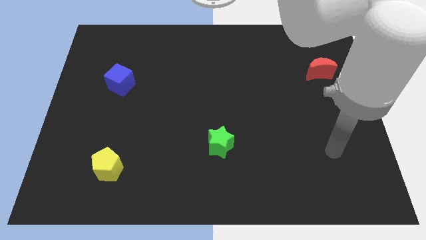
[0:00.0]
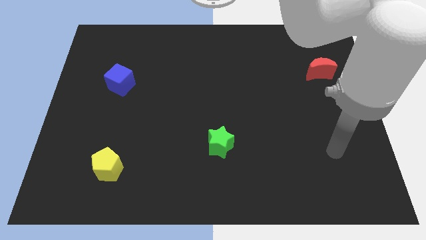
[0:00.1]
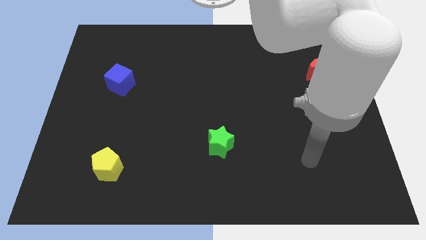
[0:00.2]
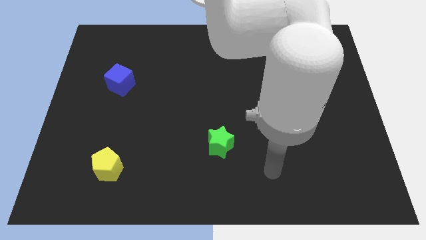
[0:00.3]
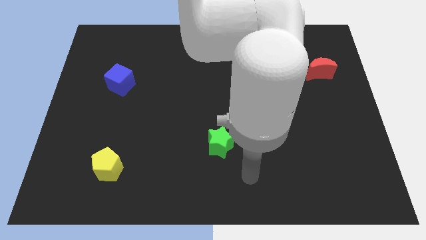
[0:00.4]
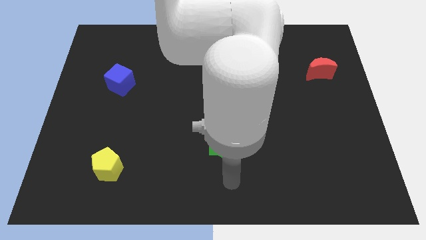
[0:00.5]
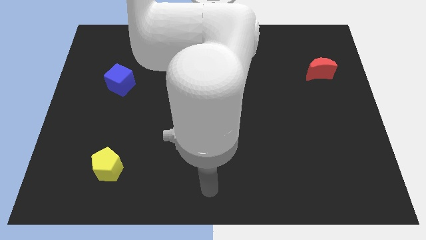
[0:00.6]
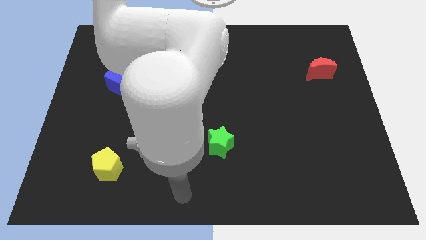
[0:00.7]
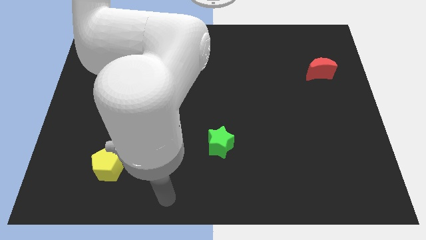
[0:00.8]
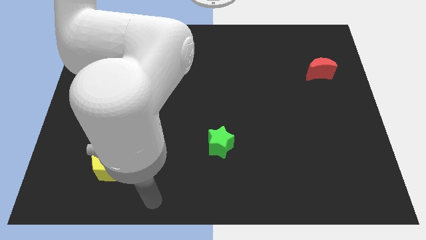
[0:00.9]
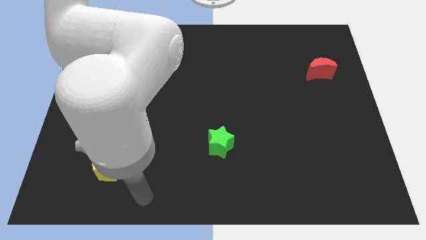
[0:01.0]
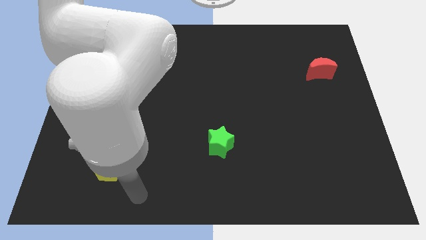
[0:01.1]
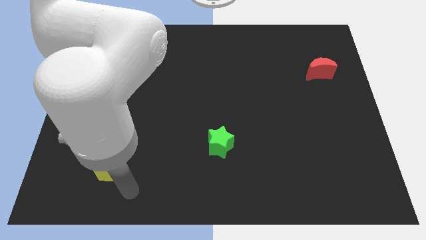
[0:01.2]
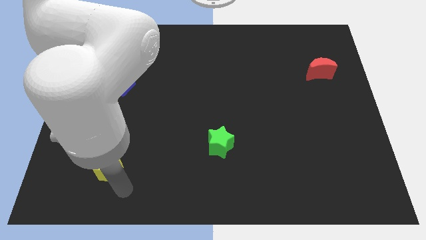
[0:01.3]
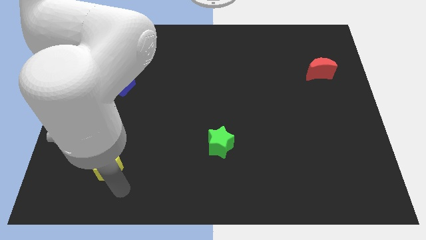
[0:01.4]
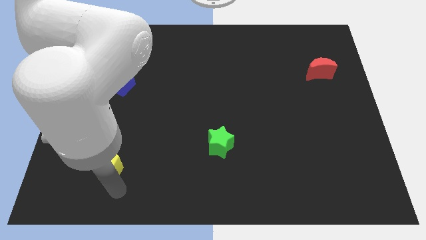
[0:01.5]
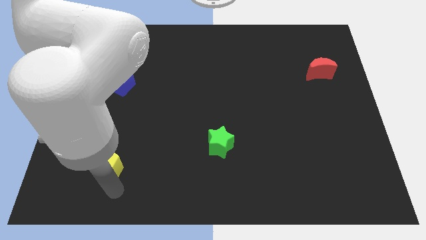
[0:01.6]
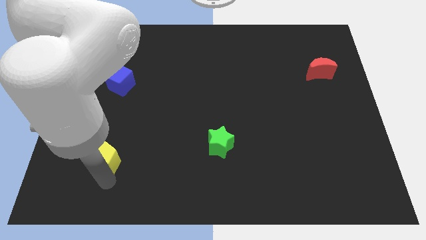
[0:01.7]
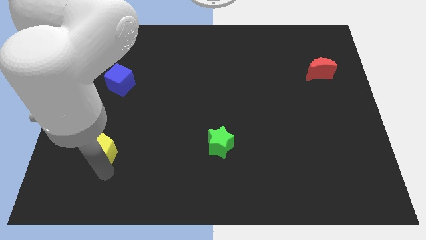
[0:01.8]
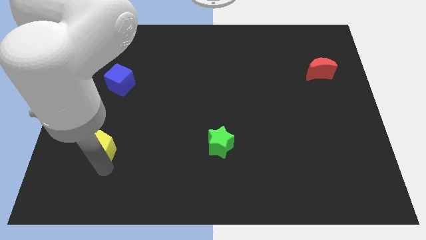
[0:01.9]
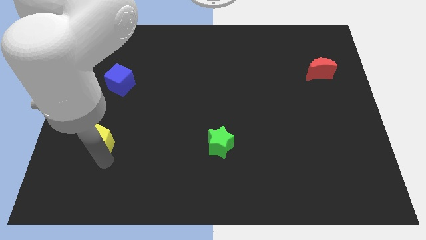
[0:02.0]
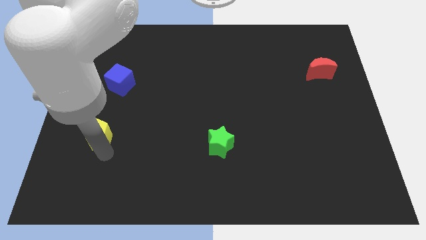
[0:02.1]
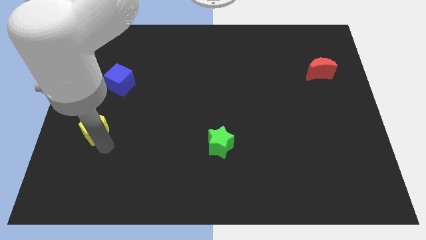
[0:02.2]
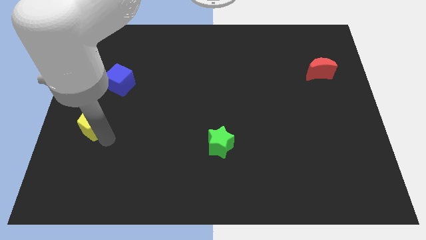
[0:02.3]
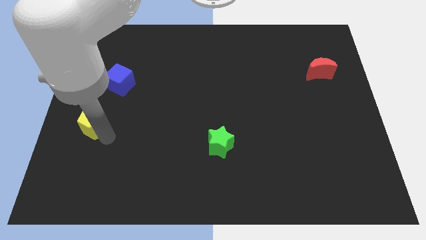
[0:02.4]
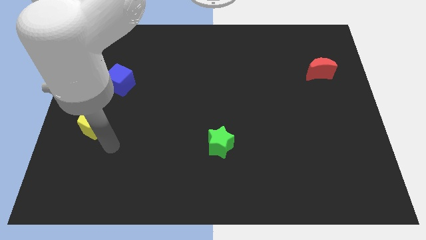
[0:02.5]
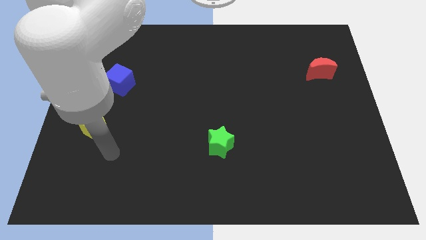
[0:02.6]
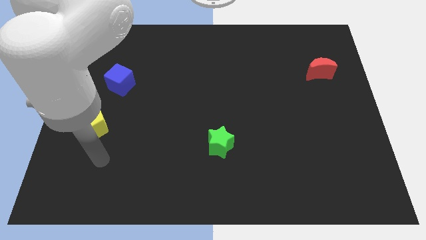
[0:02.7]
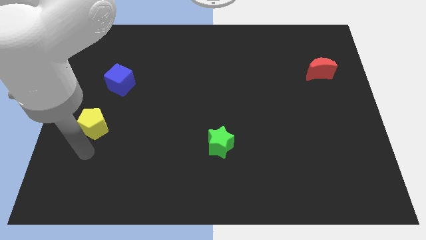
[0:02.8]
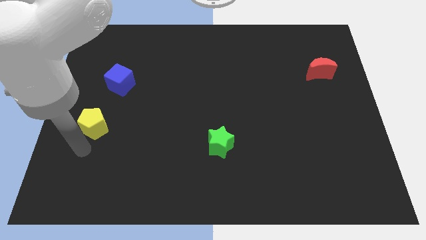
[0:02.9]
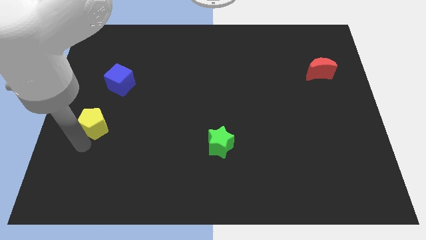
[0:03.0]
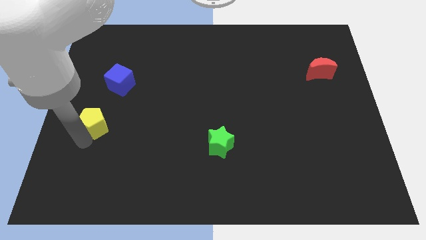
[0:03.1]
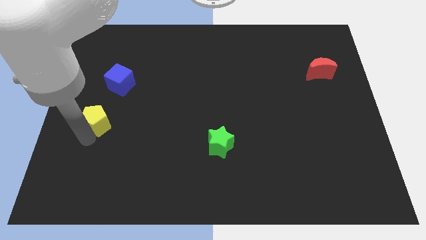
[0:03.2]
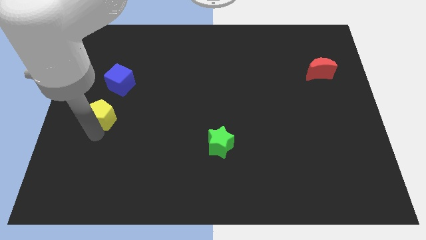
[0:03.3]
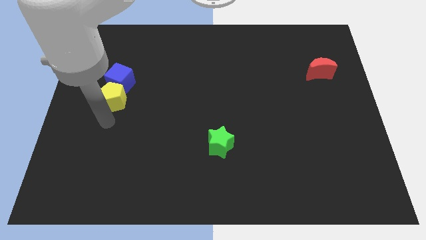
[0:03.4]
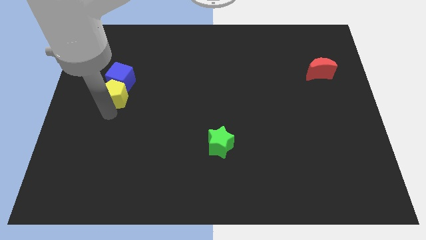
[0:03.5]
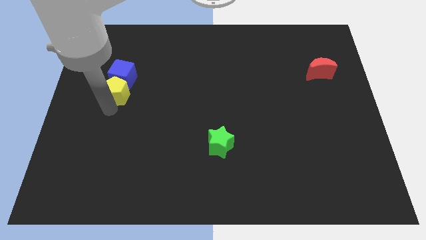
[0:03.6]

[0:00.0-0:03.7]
push the pentagon to the blue cube

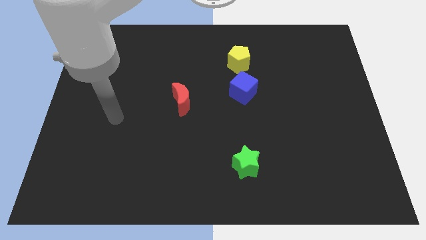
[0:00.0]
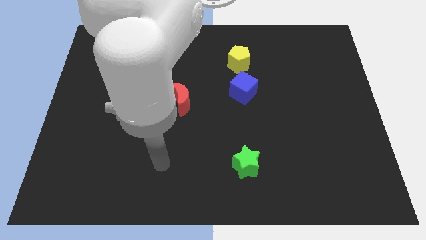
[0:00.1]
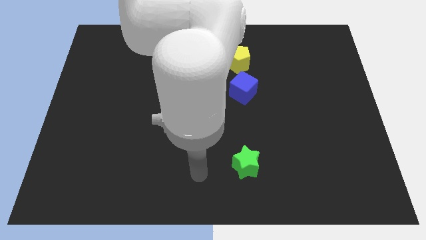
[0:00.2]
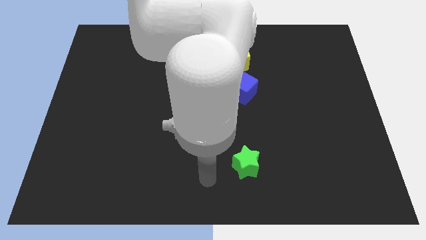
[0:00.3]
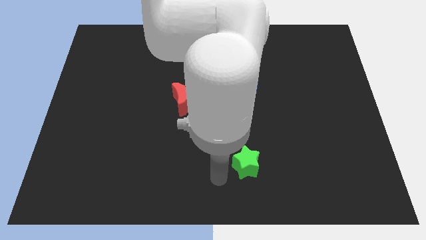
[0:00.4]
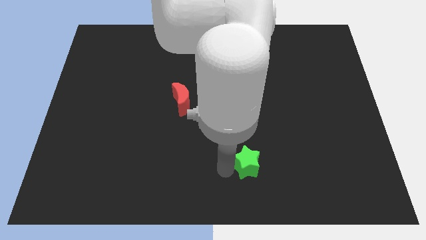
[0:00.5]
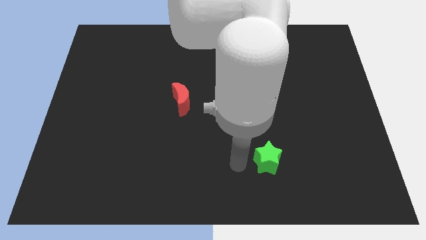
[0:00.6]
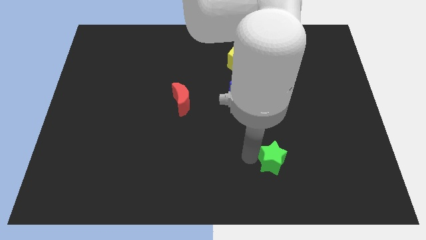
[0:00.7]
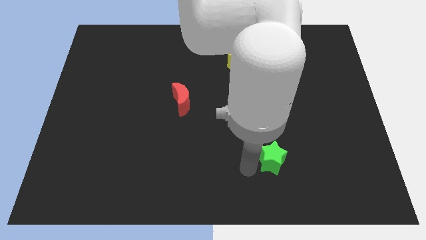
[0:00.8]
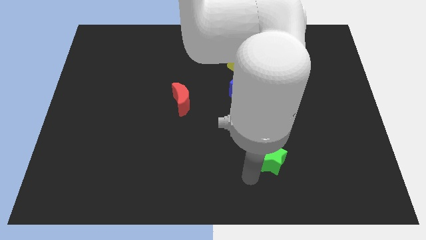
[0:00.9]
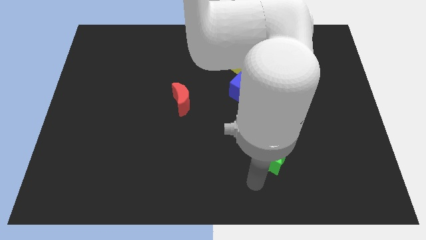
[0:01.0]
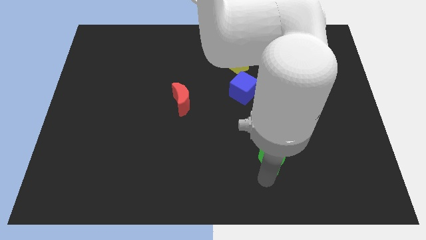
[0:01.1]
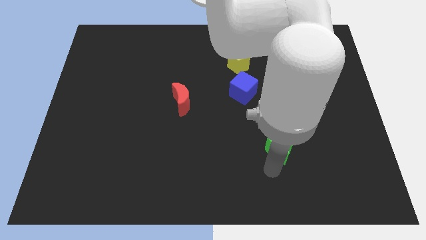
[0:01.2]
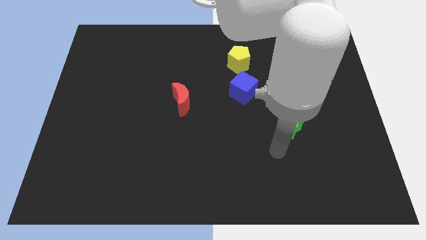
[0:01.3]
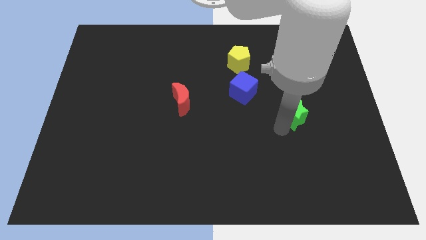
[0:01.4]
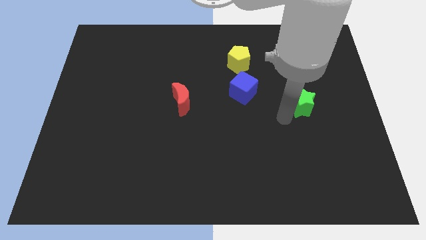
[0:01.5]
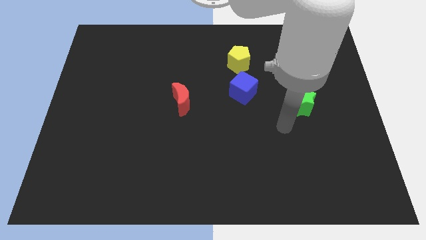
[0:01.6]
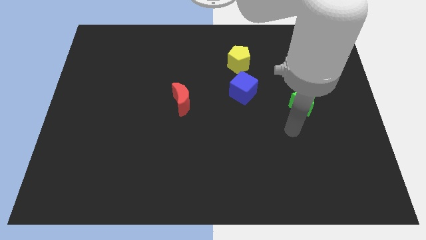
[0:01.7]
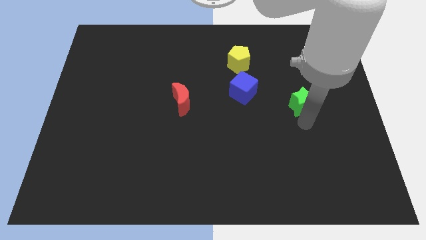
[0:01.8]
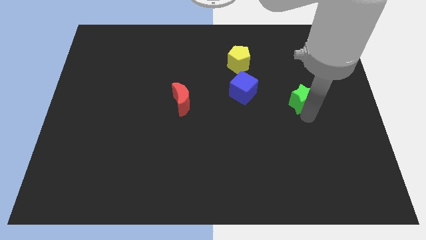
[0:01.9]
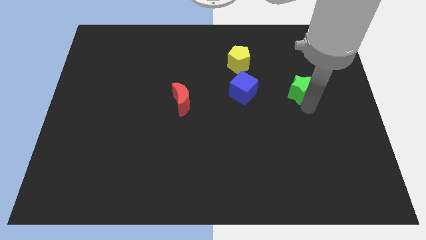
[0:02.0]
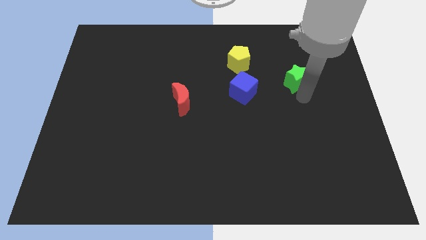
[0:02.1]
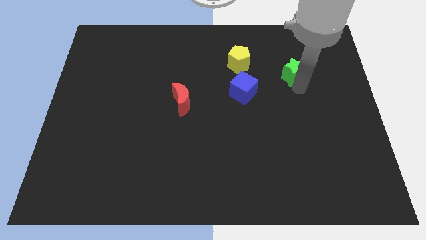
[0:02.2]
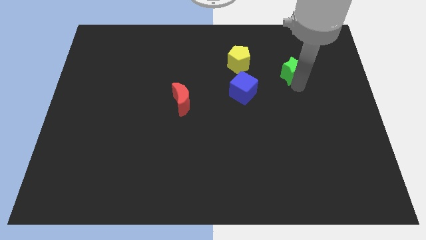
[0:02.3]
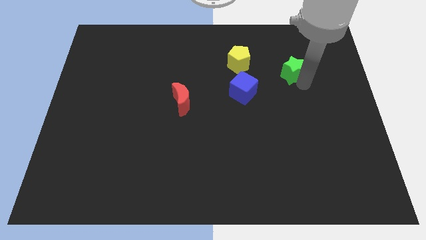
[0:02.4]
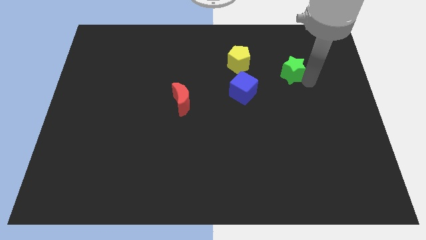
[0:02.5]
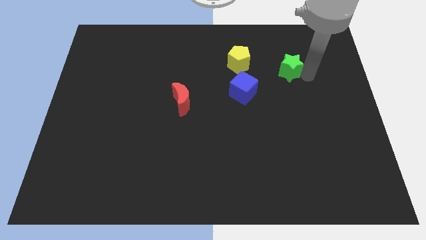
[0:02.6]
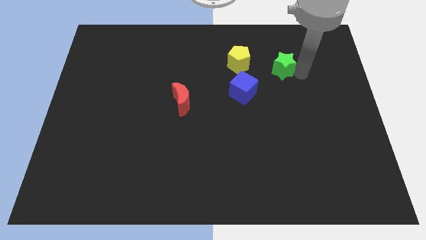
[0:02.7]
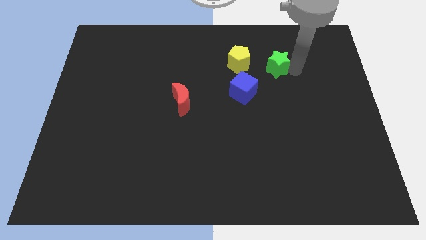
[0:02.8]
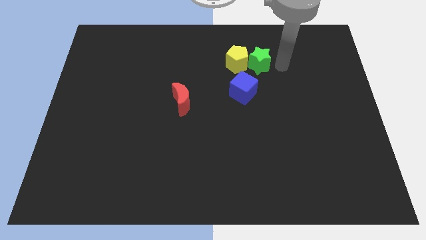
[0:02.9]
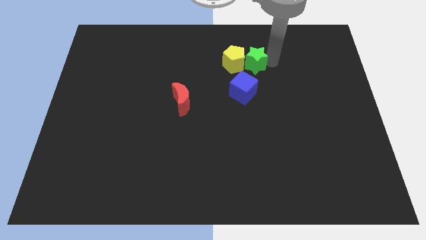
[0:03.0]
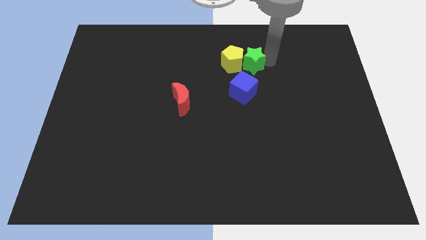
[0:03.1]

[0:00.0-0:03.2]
put the green star close to the yellow pentagon

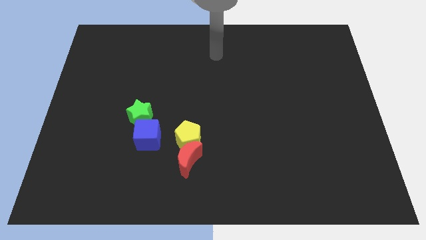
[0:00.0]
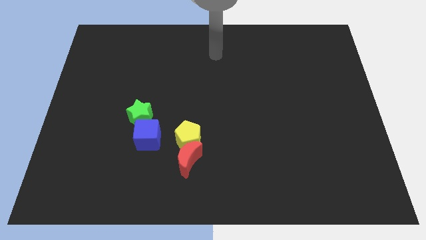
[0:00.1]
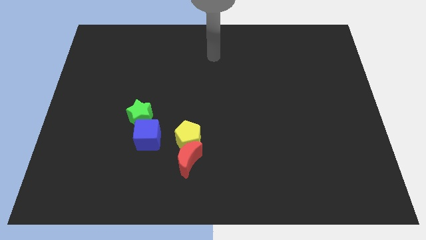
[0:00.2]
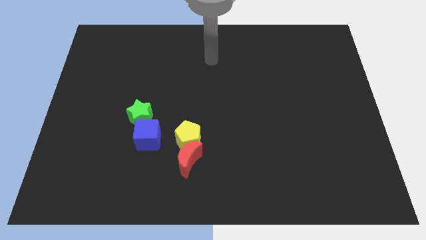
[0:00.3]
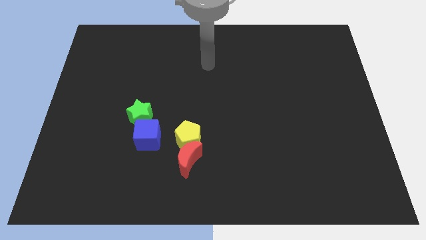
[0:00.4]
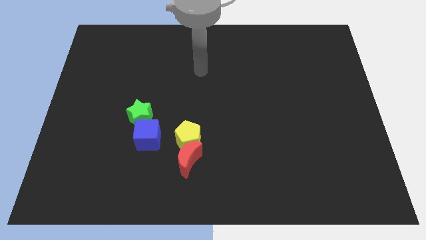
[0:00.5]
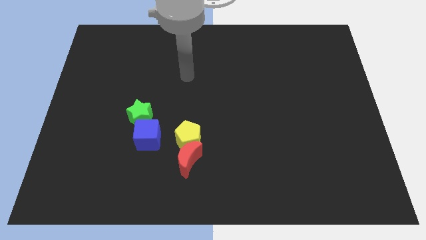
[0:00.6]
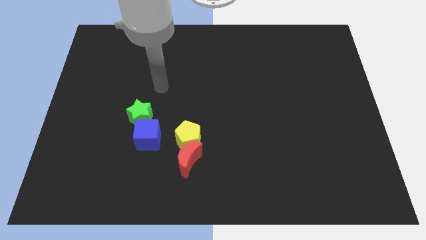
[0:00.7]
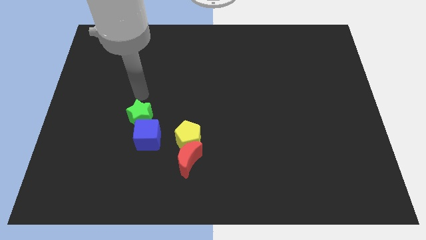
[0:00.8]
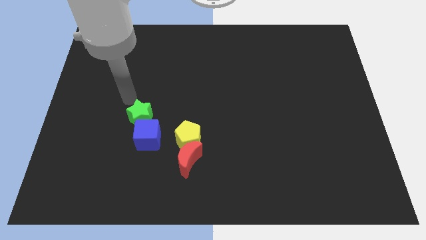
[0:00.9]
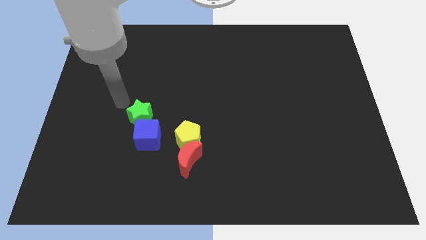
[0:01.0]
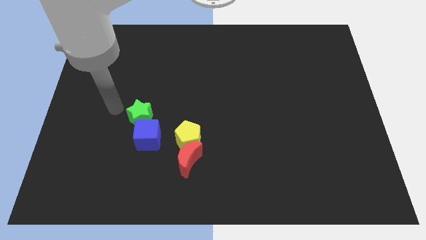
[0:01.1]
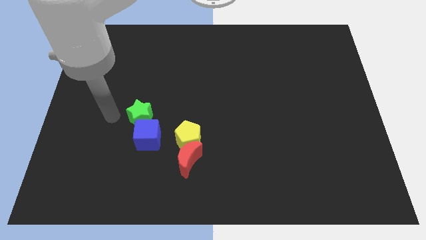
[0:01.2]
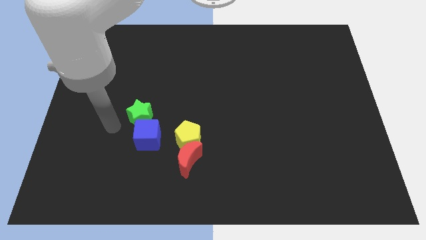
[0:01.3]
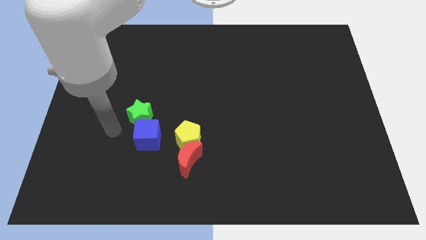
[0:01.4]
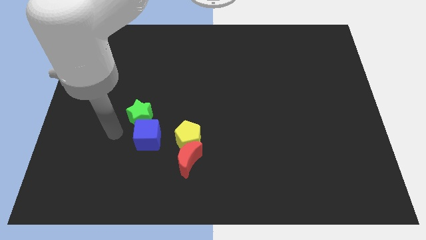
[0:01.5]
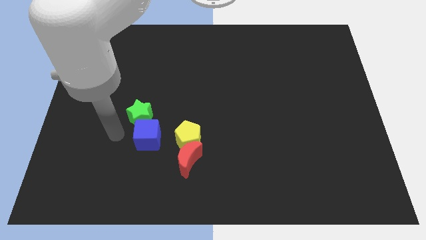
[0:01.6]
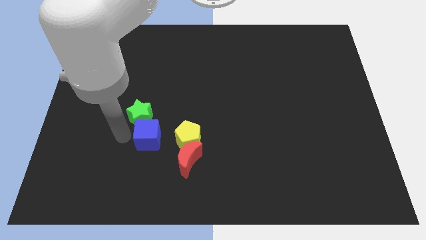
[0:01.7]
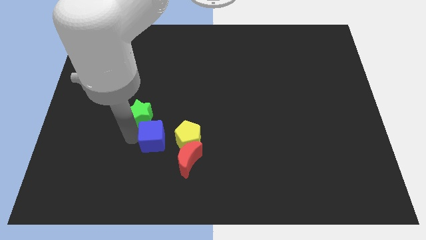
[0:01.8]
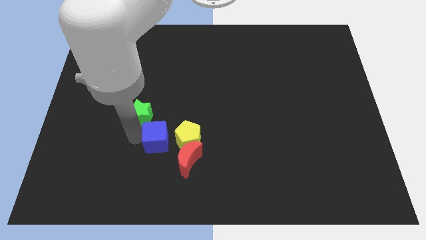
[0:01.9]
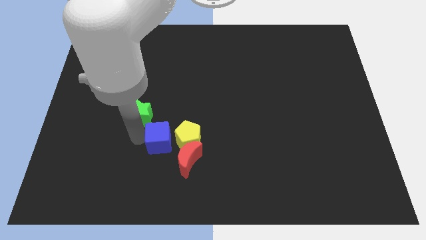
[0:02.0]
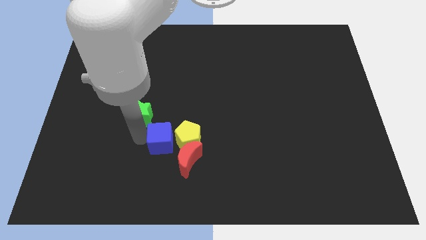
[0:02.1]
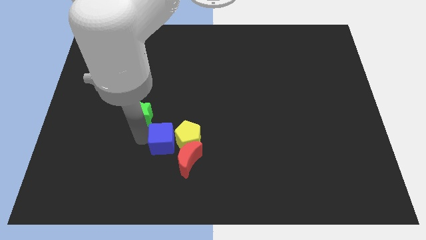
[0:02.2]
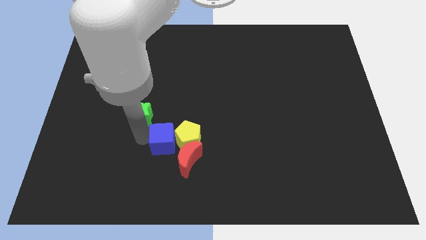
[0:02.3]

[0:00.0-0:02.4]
push the cube close to the yellow block
